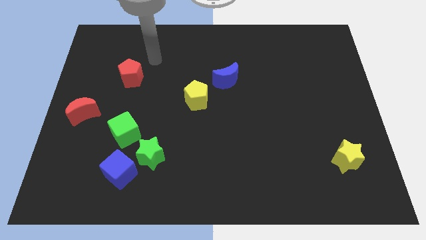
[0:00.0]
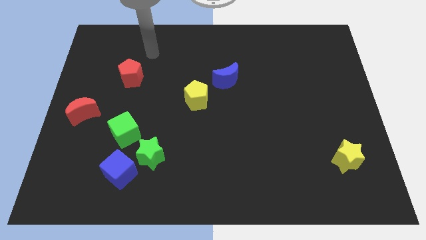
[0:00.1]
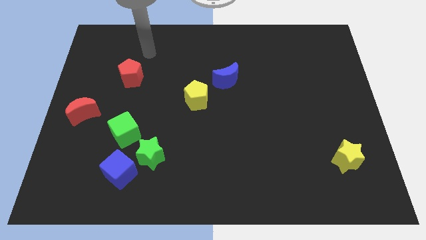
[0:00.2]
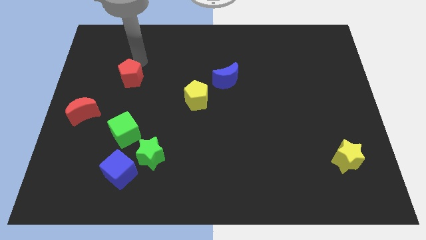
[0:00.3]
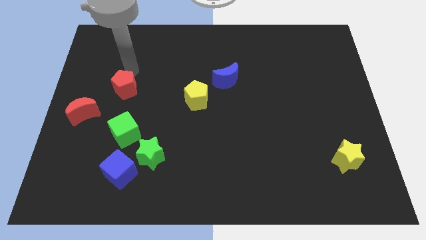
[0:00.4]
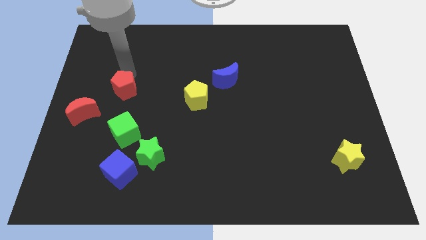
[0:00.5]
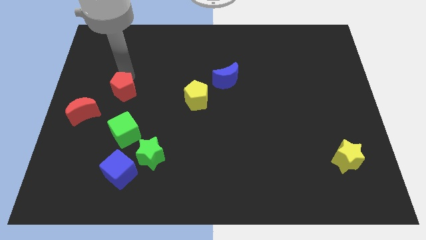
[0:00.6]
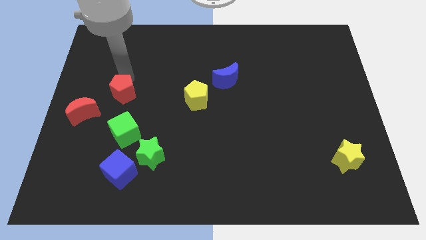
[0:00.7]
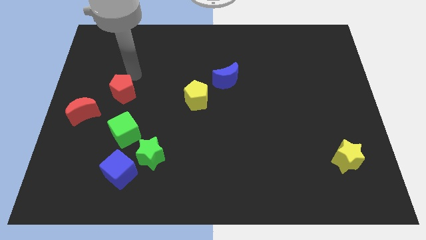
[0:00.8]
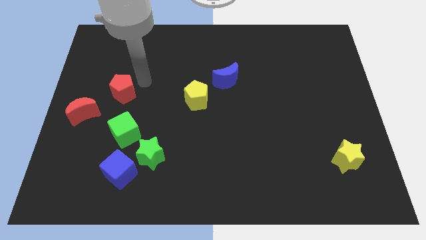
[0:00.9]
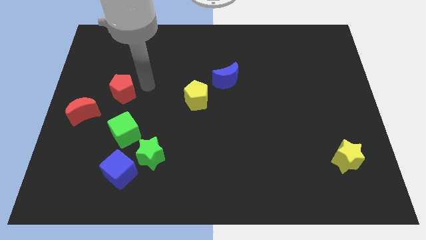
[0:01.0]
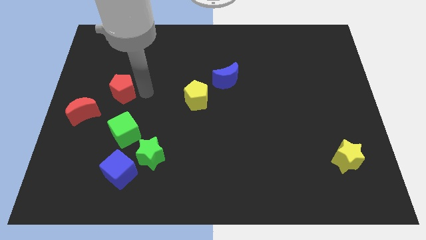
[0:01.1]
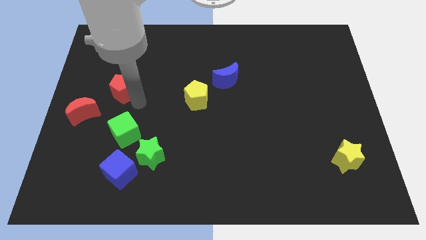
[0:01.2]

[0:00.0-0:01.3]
move the red pentagon to the right of the red crescent

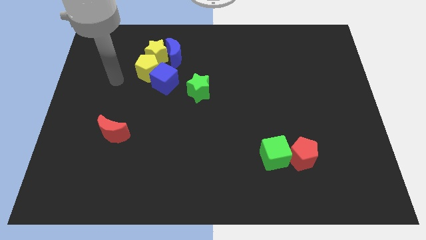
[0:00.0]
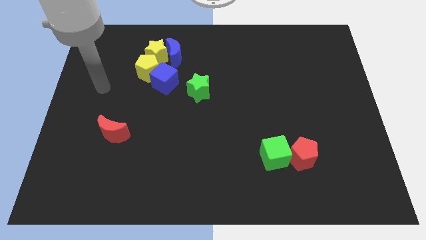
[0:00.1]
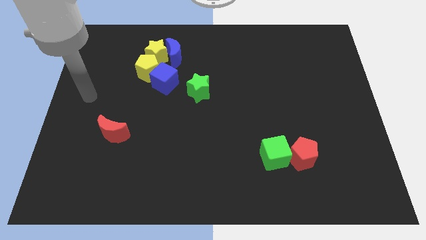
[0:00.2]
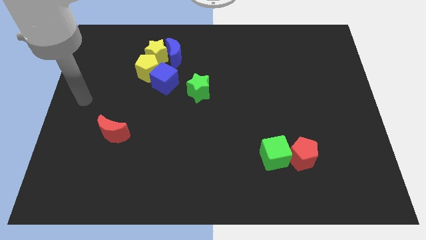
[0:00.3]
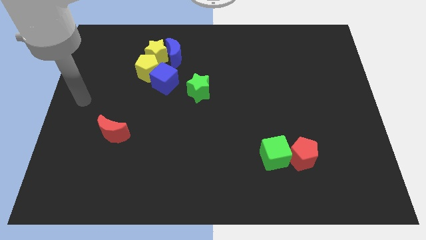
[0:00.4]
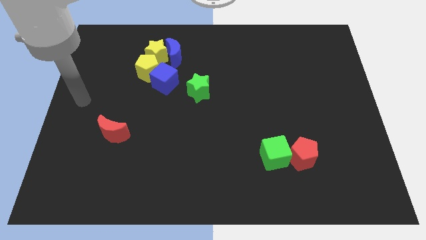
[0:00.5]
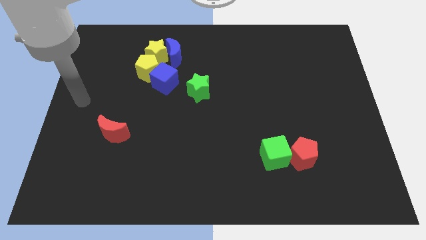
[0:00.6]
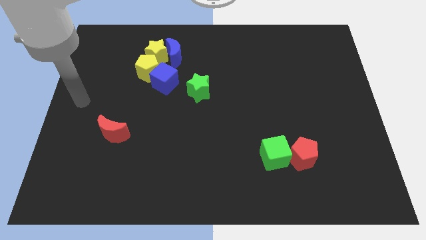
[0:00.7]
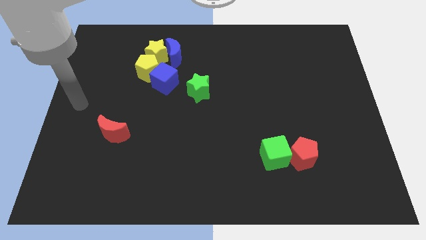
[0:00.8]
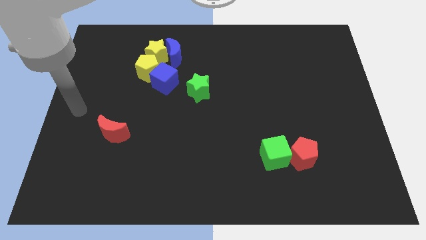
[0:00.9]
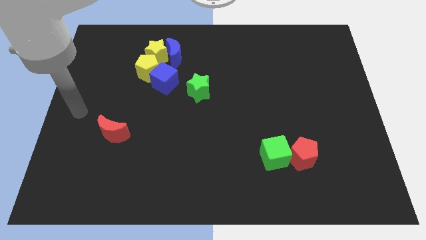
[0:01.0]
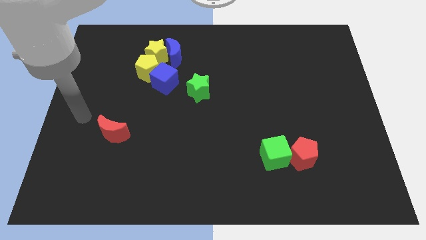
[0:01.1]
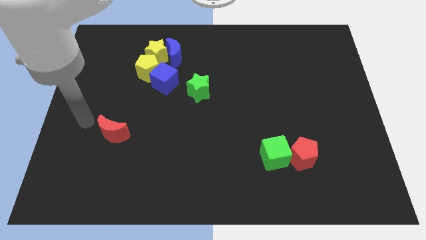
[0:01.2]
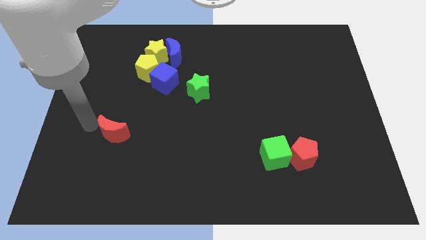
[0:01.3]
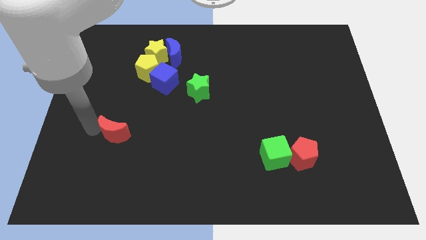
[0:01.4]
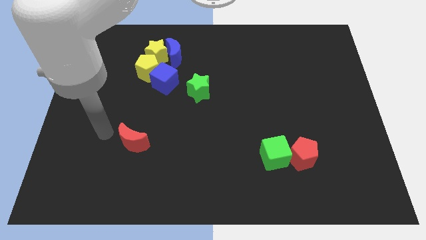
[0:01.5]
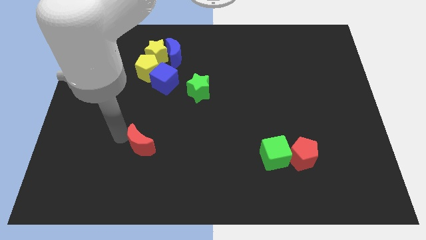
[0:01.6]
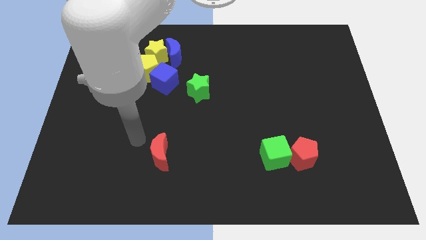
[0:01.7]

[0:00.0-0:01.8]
place the red moon vertically below the blue cube

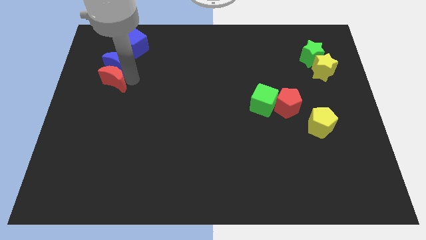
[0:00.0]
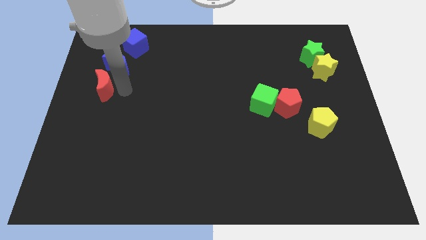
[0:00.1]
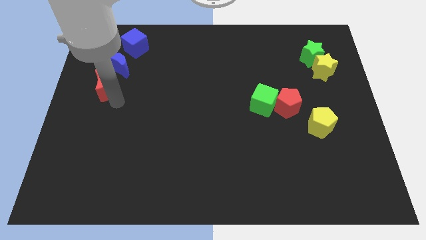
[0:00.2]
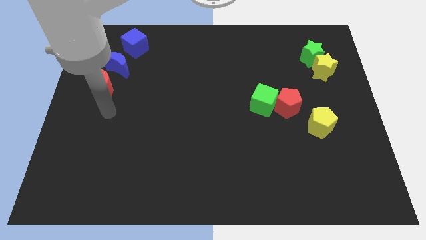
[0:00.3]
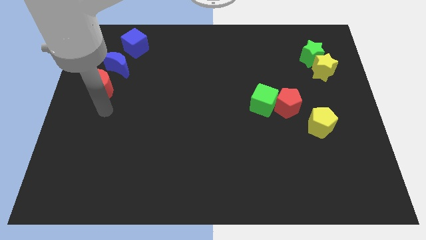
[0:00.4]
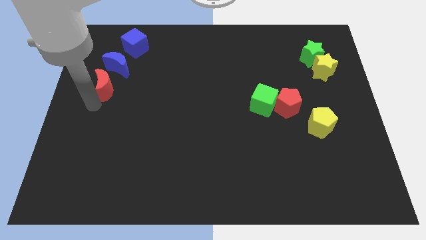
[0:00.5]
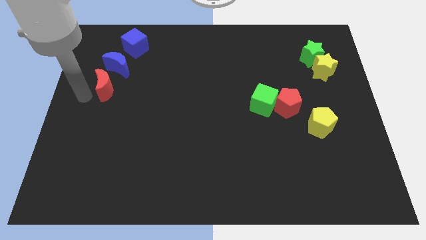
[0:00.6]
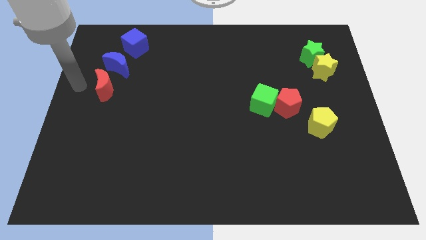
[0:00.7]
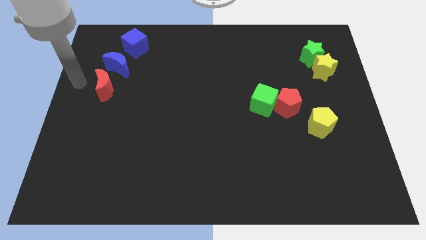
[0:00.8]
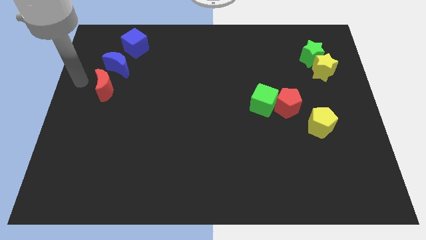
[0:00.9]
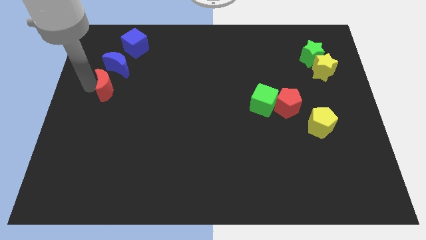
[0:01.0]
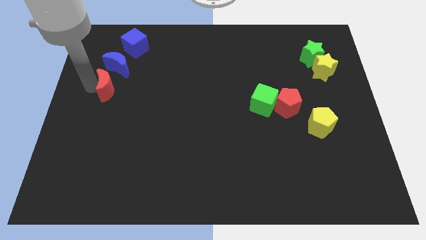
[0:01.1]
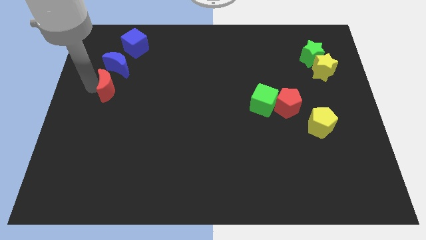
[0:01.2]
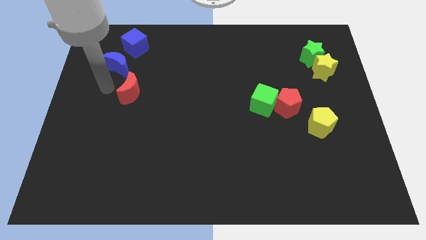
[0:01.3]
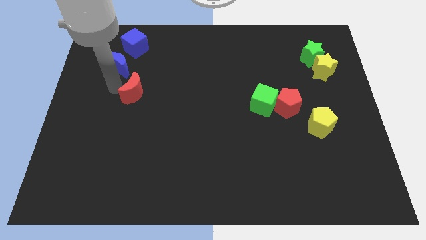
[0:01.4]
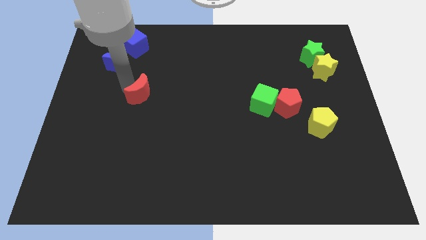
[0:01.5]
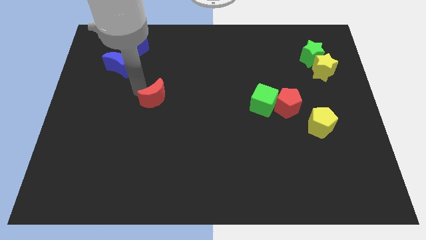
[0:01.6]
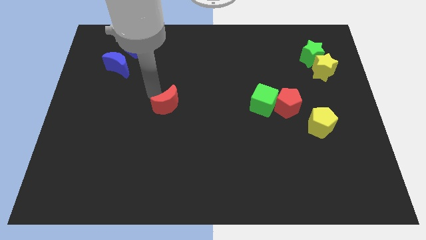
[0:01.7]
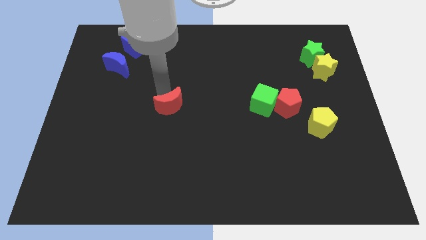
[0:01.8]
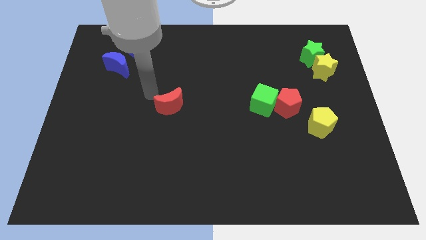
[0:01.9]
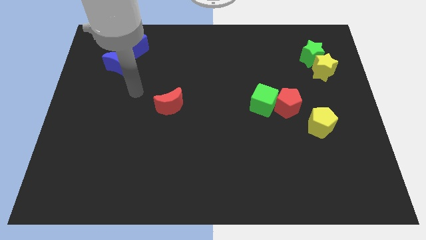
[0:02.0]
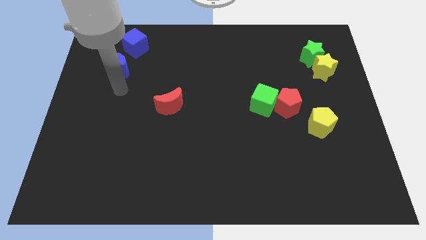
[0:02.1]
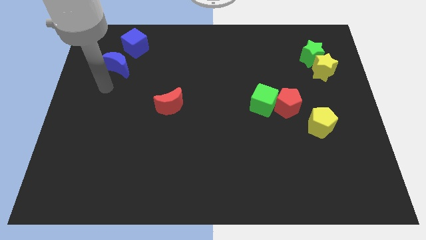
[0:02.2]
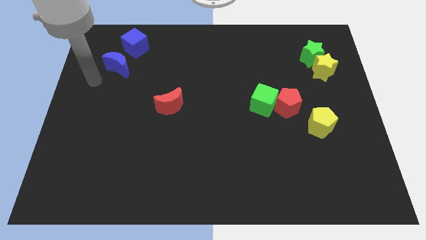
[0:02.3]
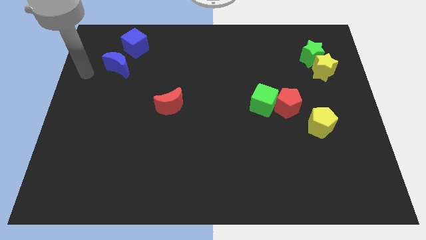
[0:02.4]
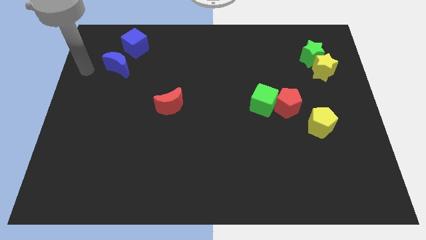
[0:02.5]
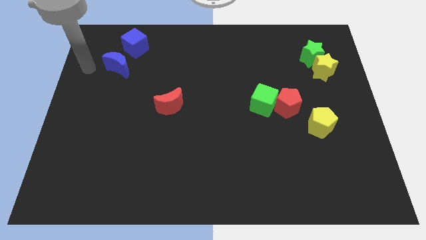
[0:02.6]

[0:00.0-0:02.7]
place the red moon to the left of the green star

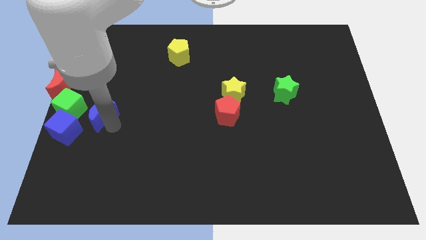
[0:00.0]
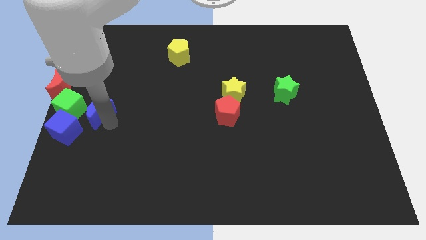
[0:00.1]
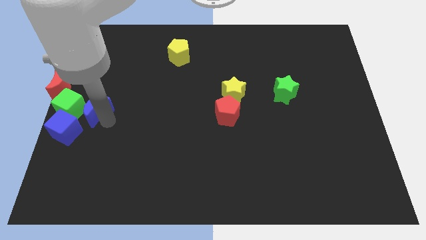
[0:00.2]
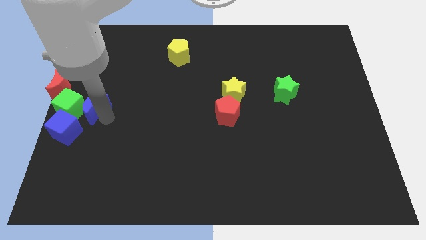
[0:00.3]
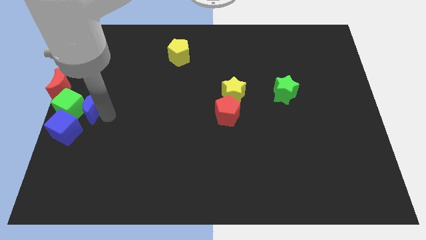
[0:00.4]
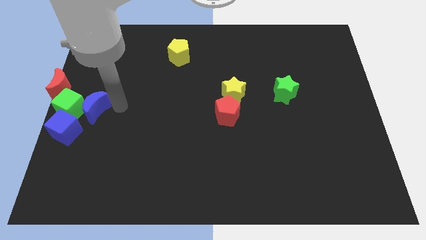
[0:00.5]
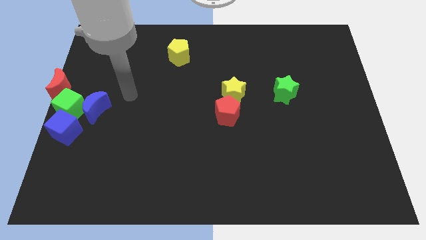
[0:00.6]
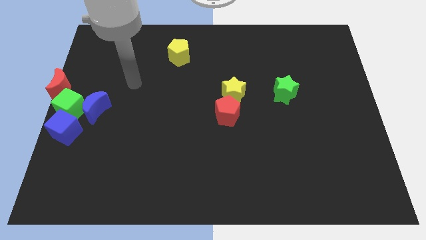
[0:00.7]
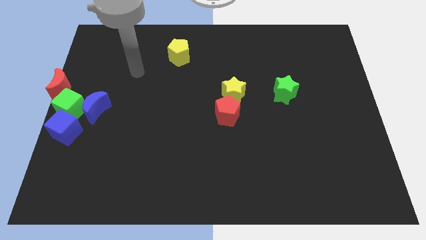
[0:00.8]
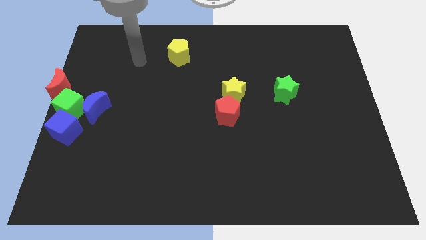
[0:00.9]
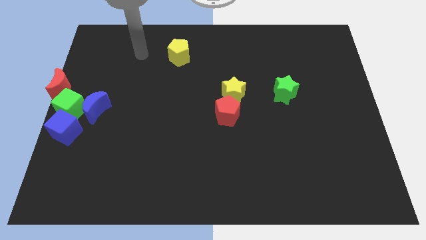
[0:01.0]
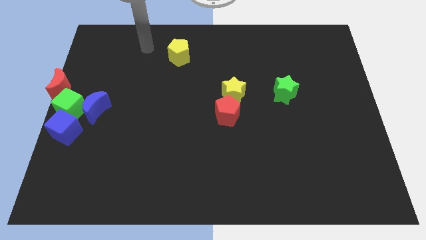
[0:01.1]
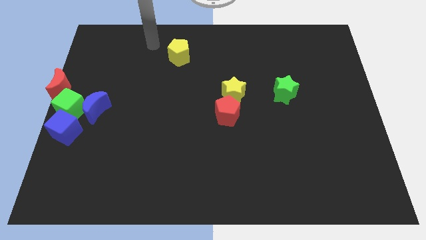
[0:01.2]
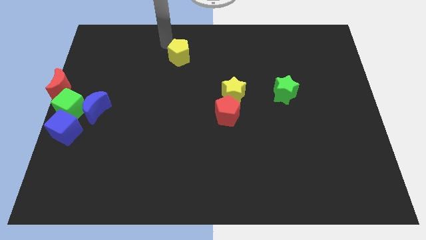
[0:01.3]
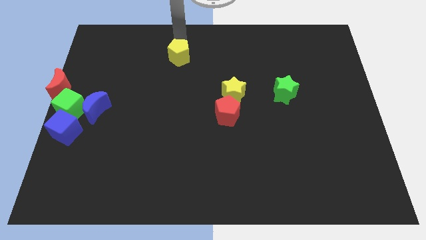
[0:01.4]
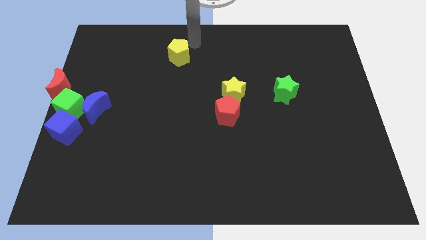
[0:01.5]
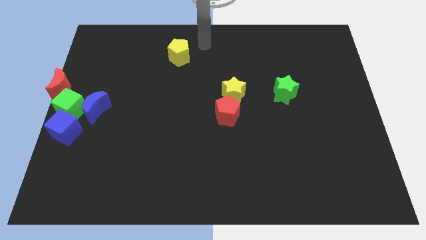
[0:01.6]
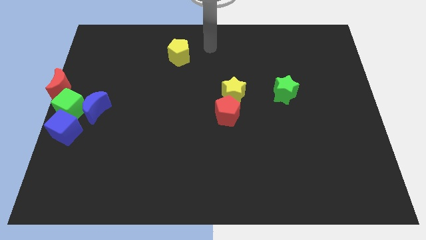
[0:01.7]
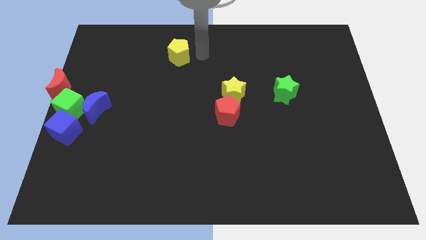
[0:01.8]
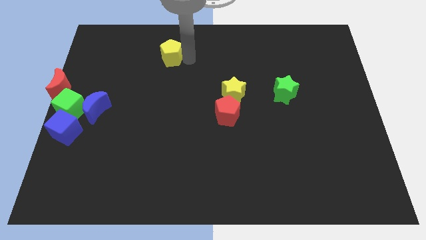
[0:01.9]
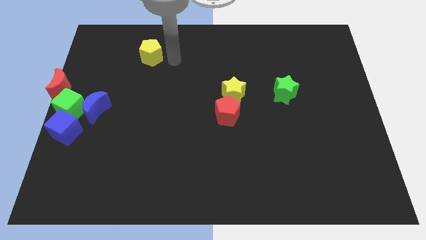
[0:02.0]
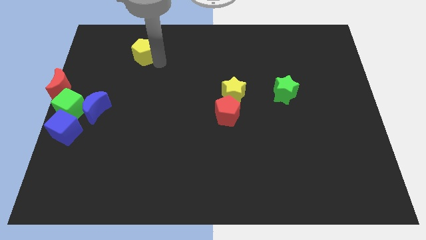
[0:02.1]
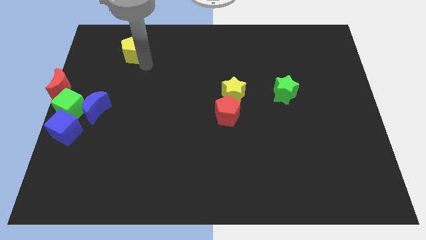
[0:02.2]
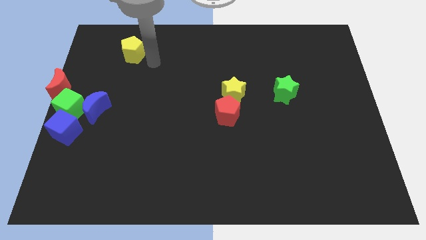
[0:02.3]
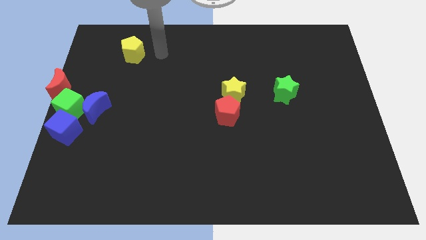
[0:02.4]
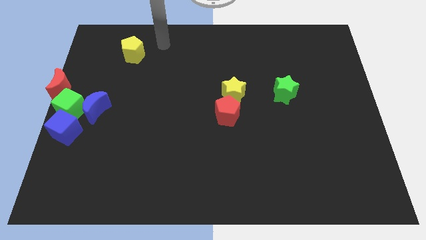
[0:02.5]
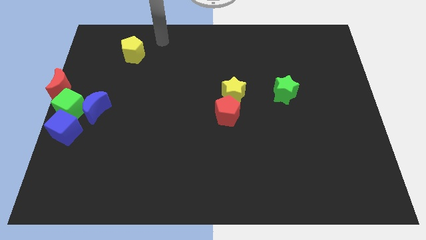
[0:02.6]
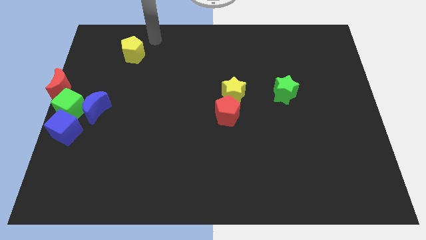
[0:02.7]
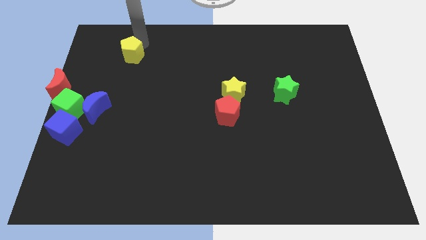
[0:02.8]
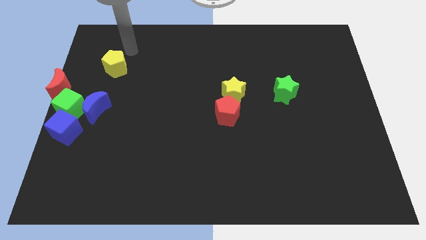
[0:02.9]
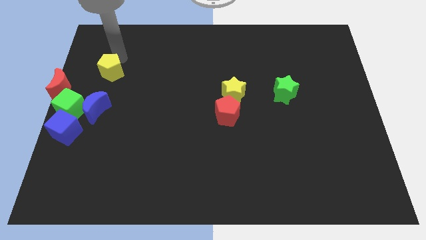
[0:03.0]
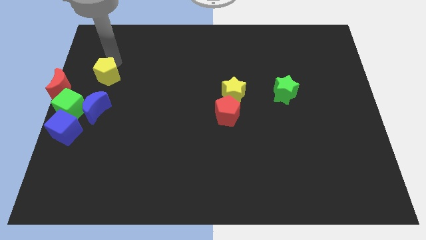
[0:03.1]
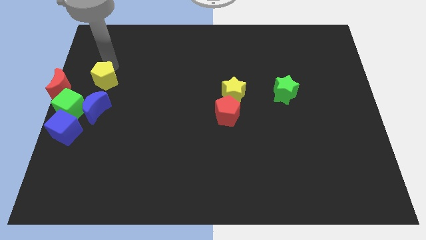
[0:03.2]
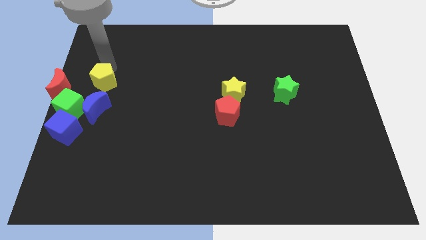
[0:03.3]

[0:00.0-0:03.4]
push yellow pentagon close to the blue cube
